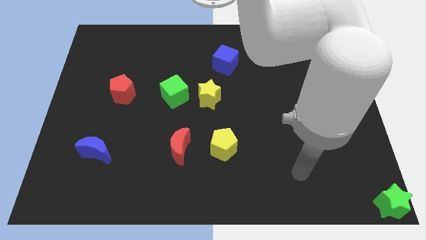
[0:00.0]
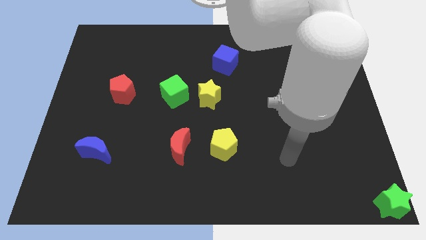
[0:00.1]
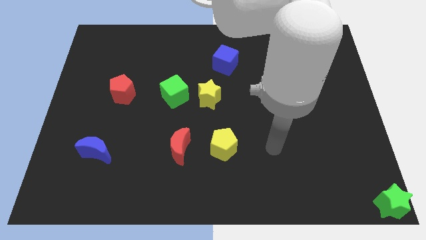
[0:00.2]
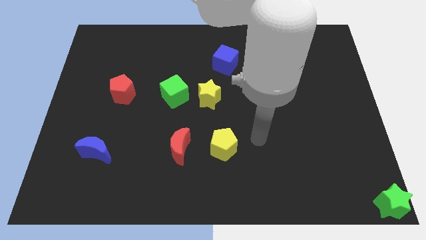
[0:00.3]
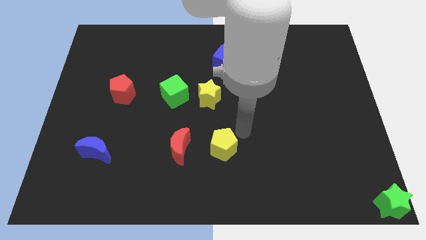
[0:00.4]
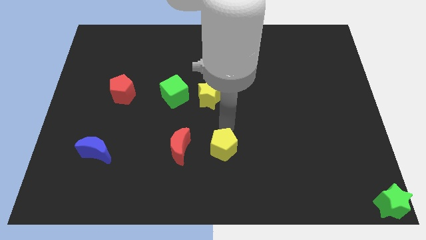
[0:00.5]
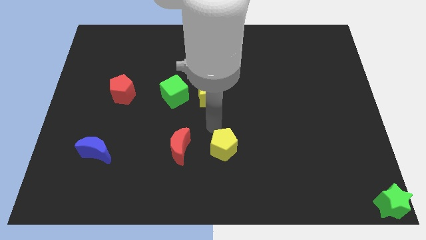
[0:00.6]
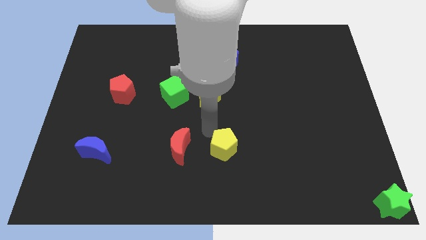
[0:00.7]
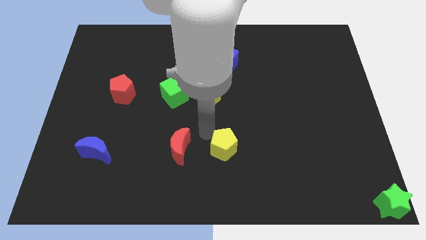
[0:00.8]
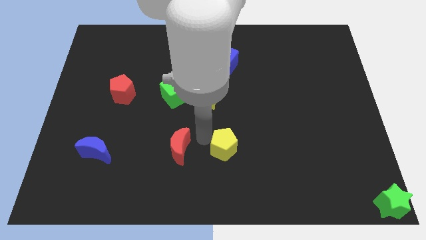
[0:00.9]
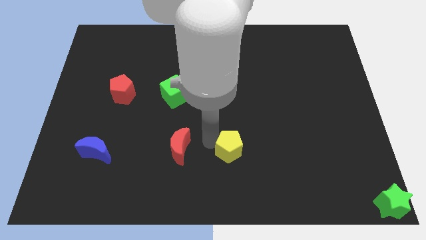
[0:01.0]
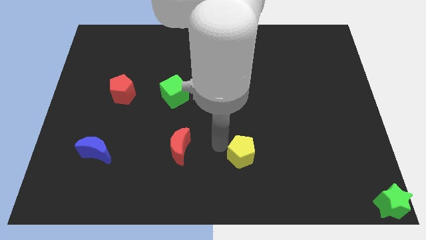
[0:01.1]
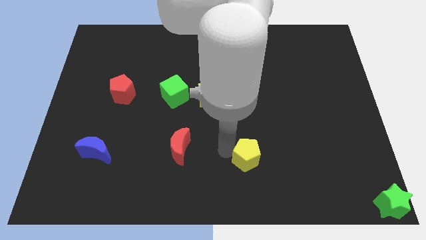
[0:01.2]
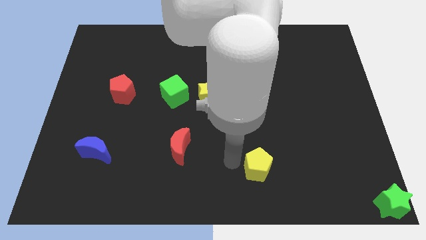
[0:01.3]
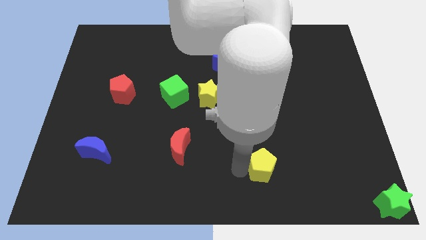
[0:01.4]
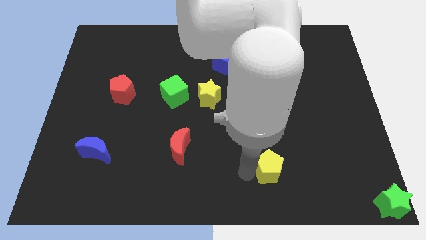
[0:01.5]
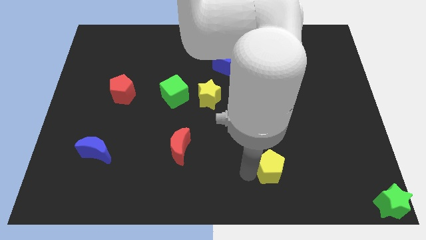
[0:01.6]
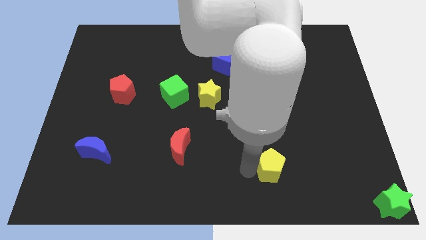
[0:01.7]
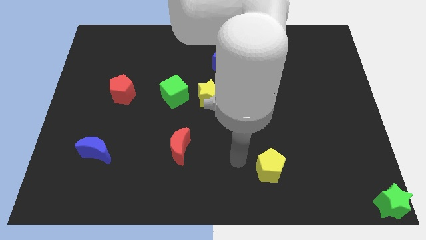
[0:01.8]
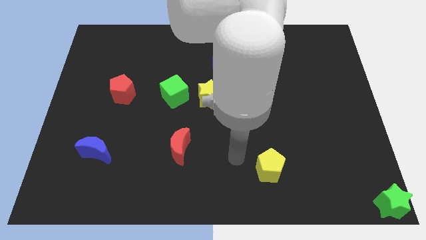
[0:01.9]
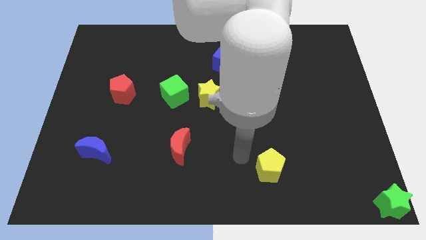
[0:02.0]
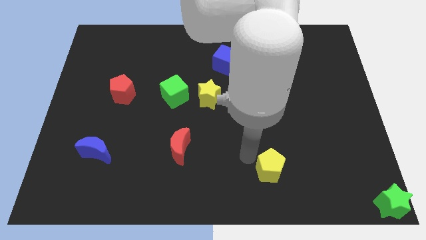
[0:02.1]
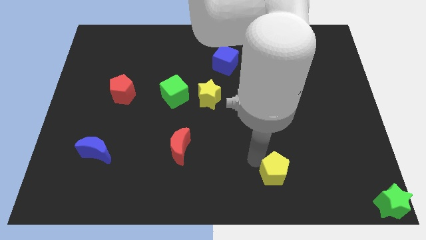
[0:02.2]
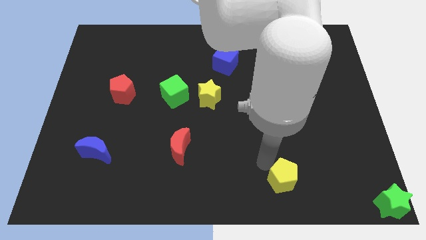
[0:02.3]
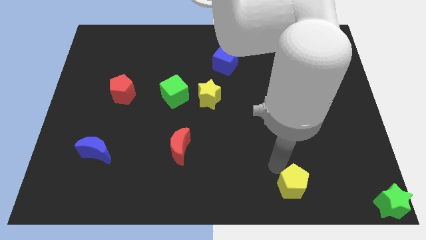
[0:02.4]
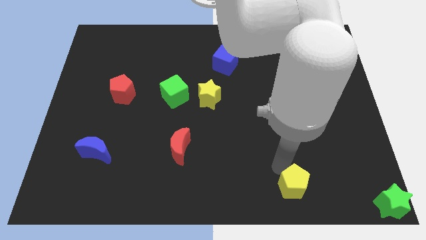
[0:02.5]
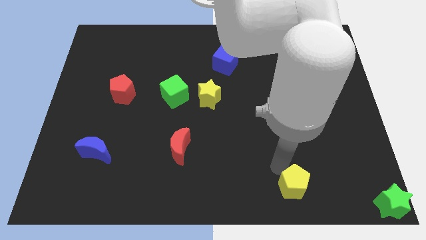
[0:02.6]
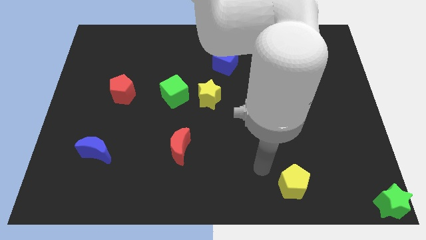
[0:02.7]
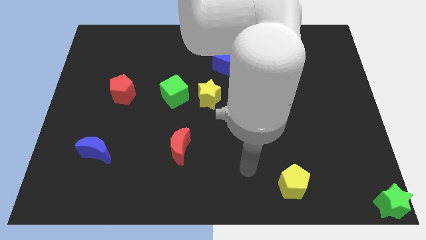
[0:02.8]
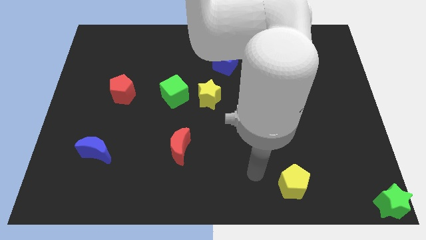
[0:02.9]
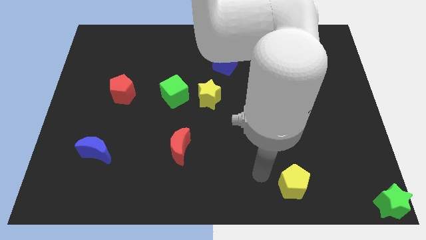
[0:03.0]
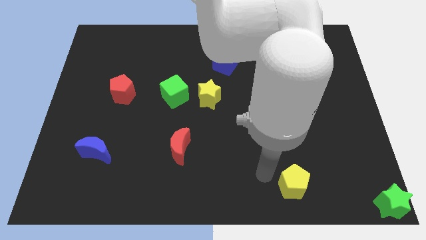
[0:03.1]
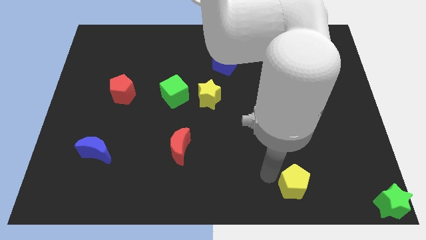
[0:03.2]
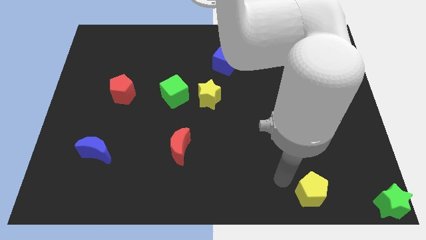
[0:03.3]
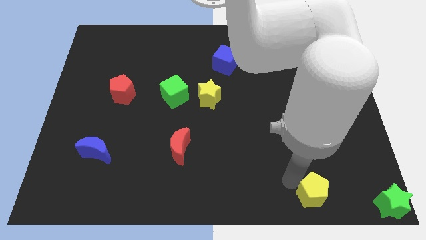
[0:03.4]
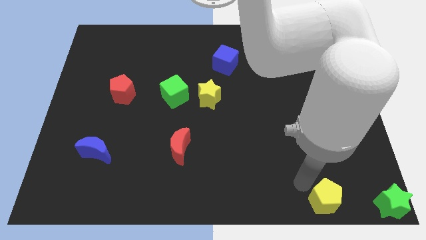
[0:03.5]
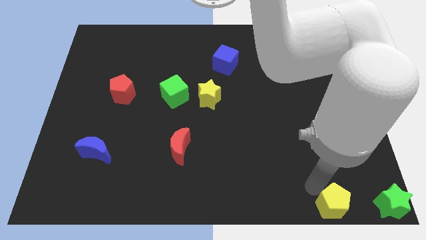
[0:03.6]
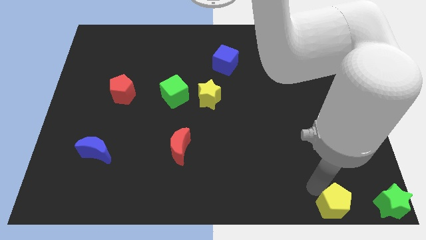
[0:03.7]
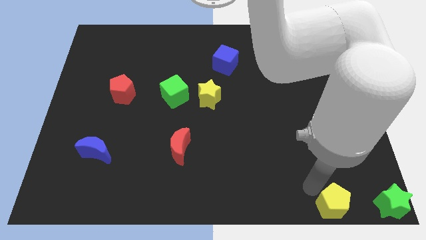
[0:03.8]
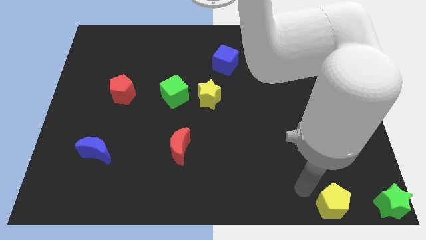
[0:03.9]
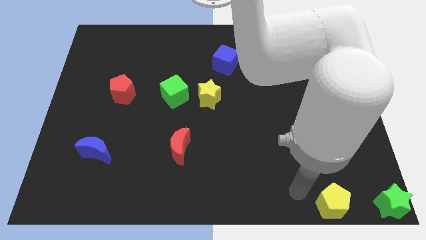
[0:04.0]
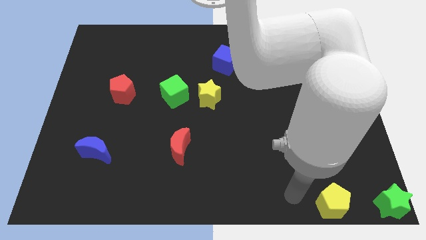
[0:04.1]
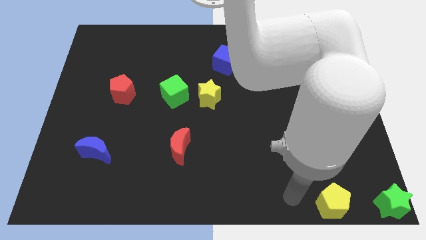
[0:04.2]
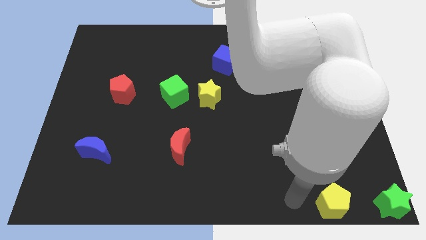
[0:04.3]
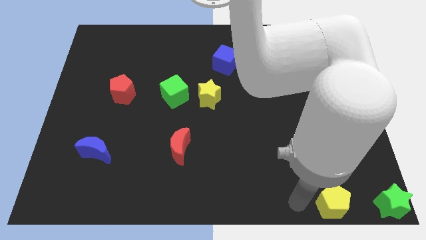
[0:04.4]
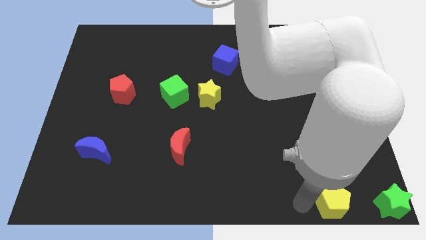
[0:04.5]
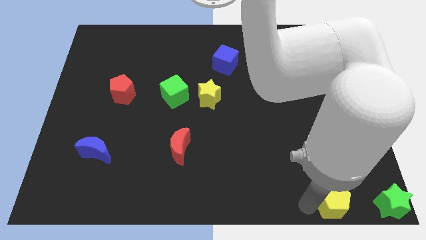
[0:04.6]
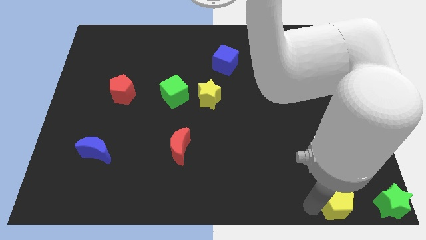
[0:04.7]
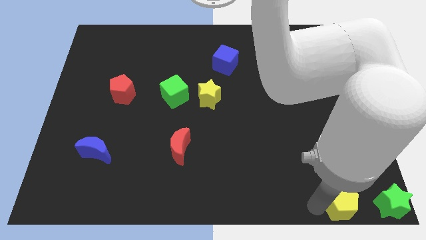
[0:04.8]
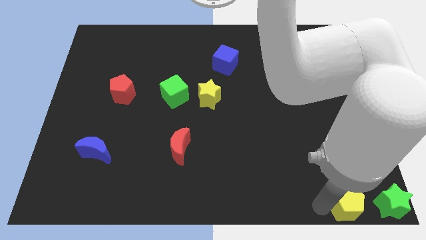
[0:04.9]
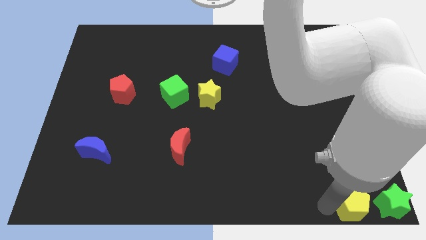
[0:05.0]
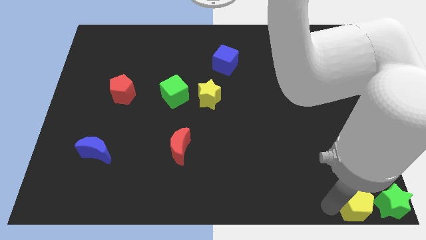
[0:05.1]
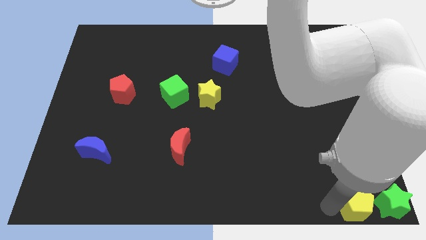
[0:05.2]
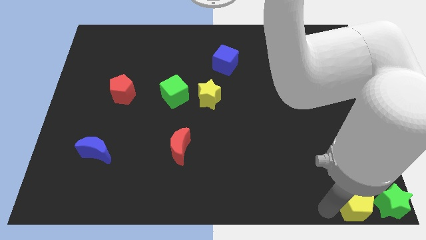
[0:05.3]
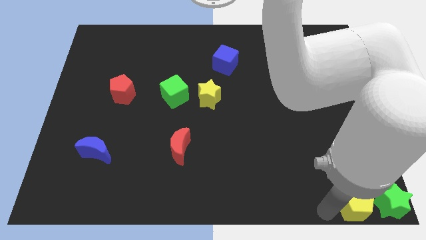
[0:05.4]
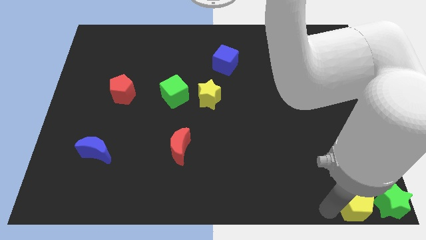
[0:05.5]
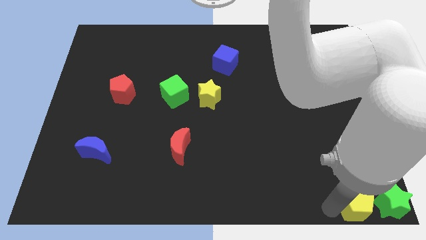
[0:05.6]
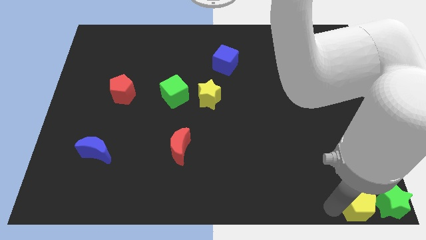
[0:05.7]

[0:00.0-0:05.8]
move the yellow pentagon to left of green star

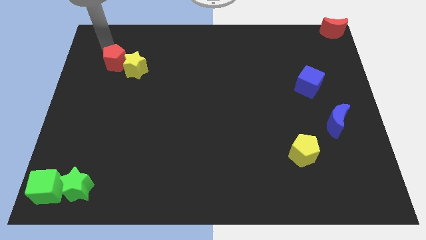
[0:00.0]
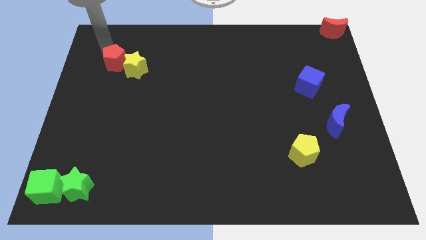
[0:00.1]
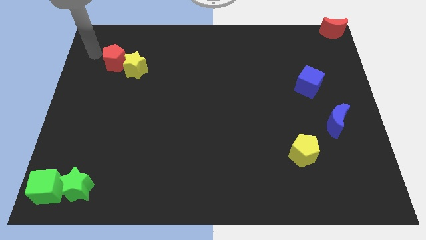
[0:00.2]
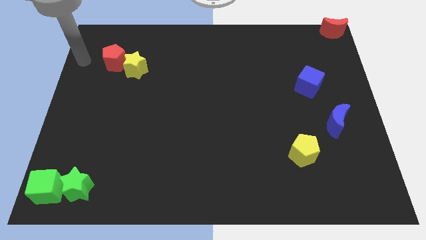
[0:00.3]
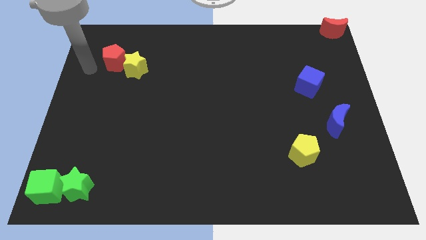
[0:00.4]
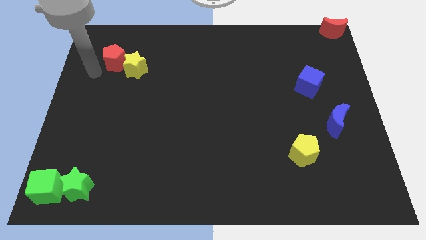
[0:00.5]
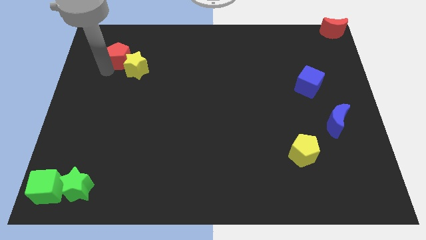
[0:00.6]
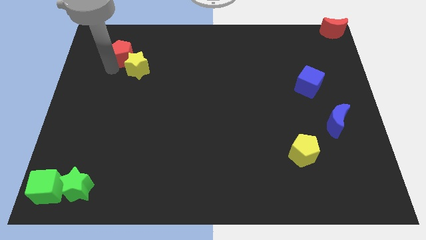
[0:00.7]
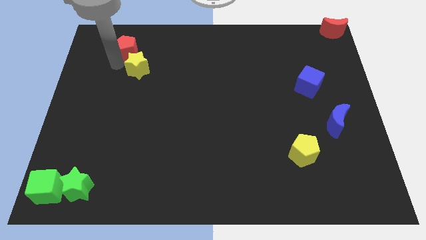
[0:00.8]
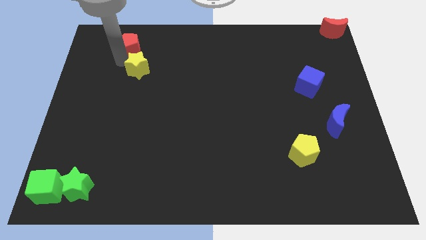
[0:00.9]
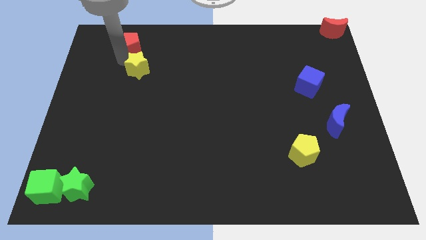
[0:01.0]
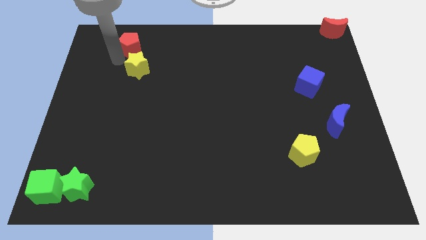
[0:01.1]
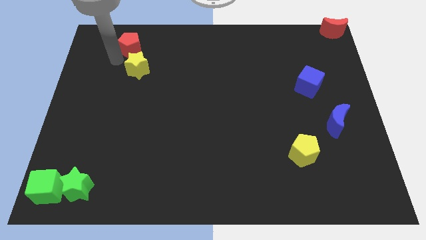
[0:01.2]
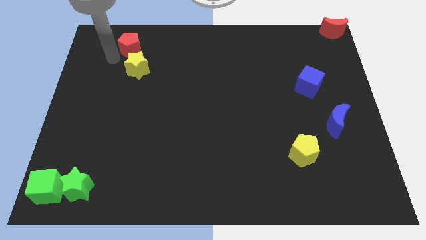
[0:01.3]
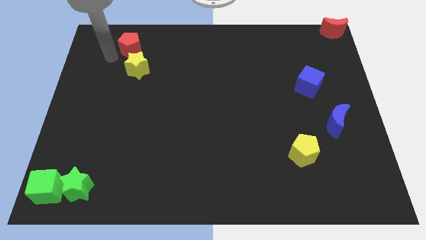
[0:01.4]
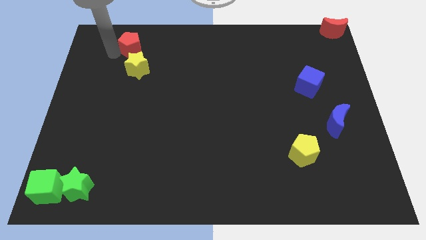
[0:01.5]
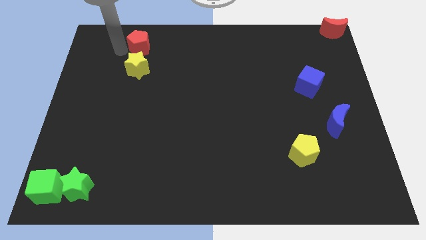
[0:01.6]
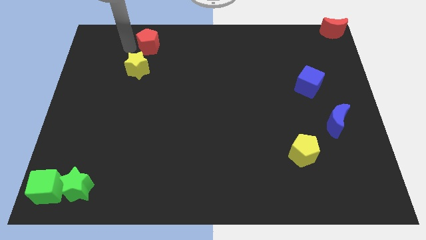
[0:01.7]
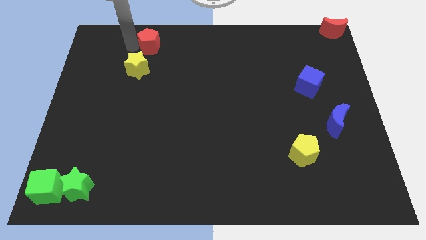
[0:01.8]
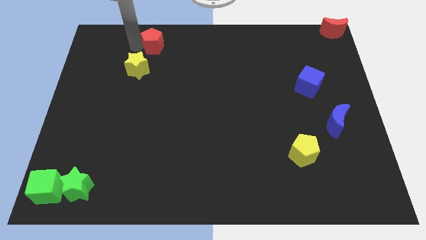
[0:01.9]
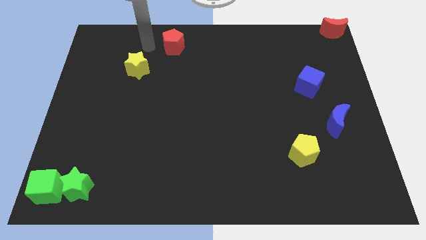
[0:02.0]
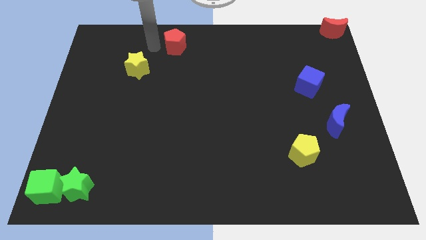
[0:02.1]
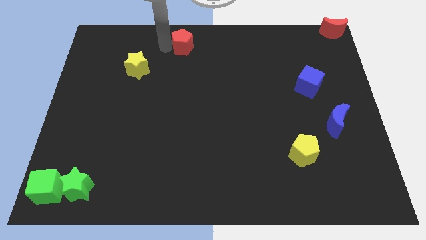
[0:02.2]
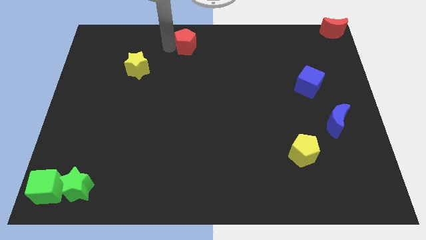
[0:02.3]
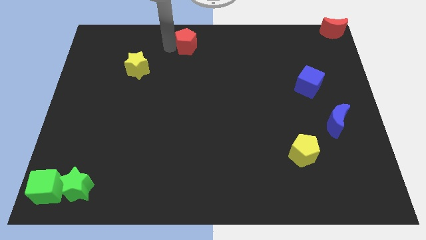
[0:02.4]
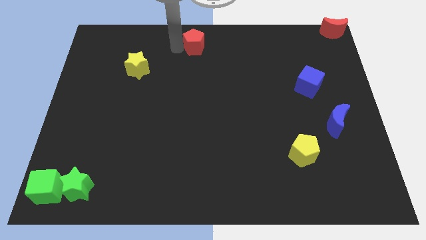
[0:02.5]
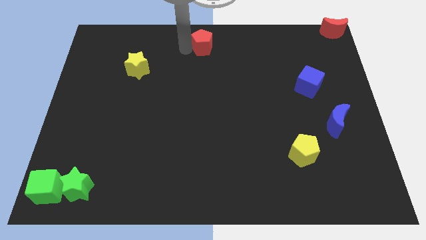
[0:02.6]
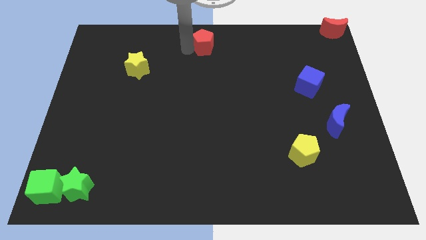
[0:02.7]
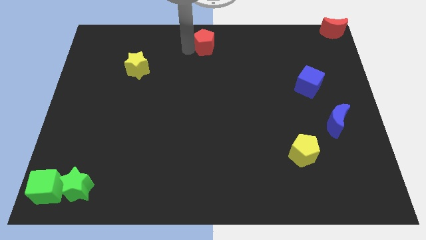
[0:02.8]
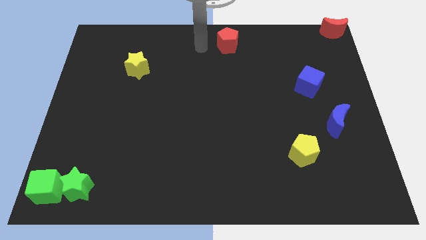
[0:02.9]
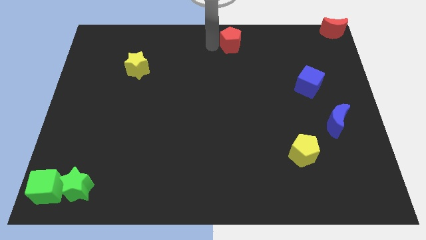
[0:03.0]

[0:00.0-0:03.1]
move the red pentagon to the top center of the board
